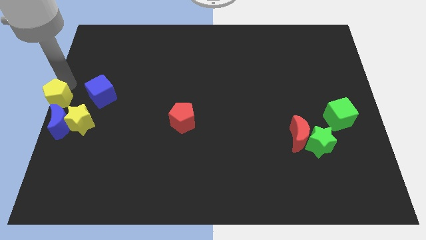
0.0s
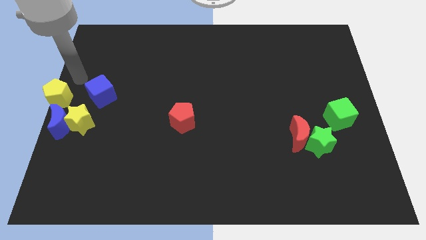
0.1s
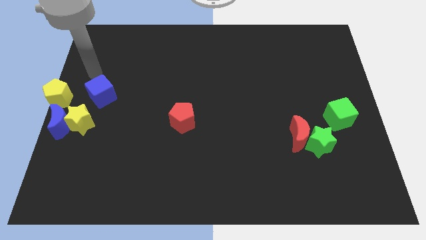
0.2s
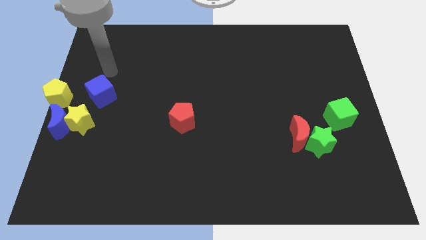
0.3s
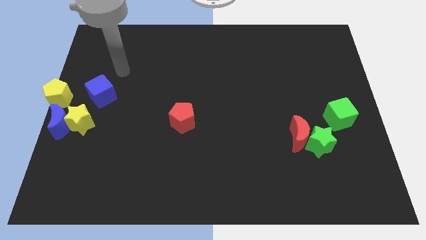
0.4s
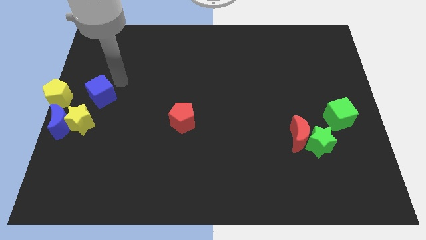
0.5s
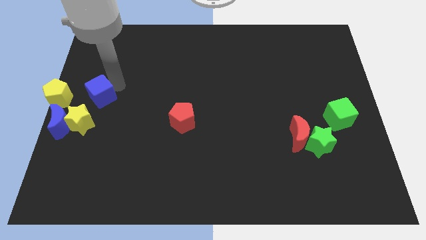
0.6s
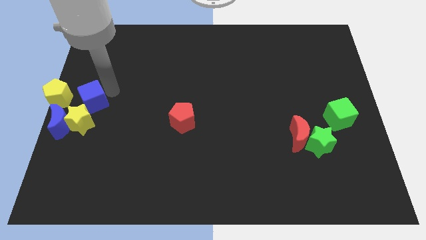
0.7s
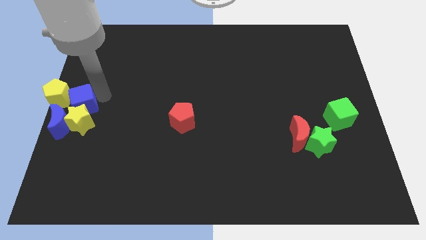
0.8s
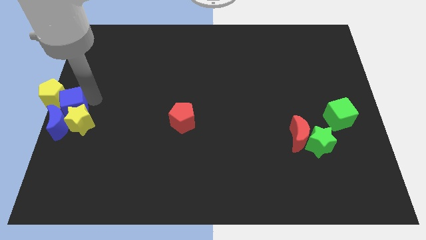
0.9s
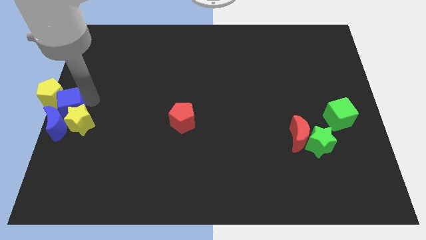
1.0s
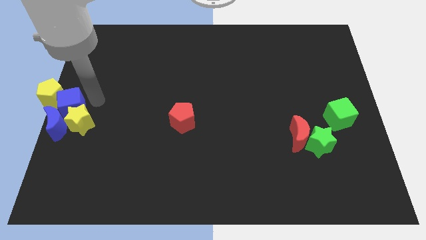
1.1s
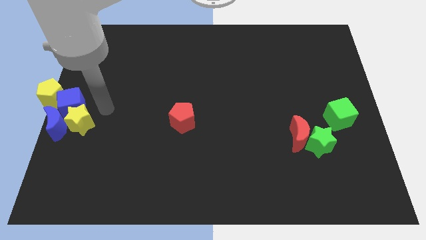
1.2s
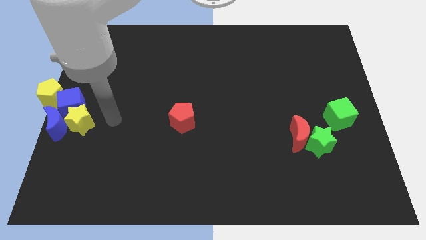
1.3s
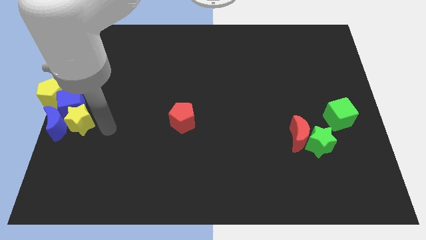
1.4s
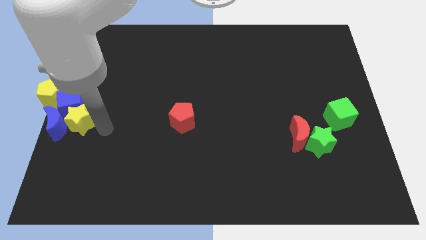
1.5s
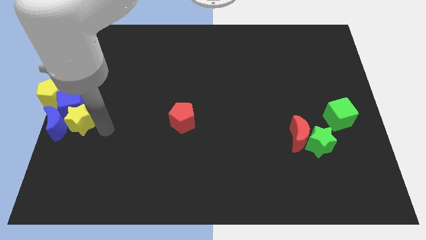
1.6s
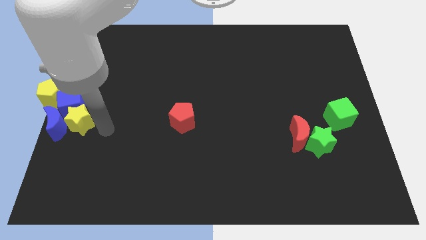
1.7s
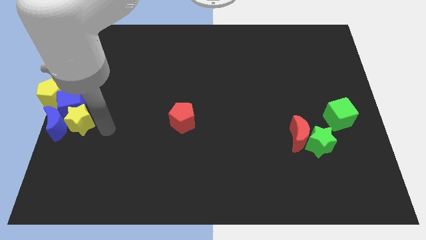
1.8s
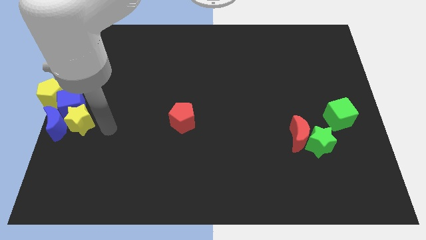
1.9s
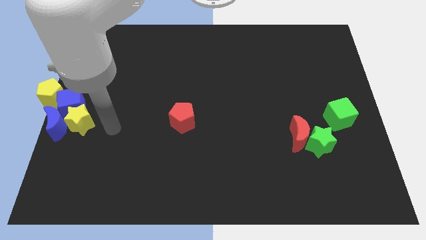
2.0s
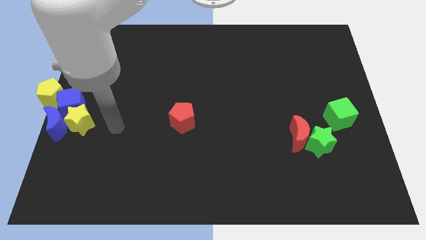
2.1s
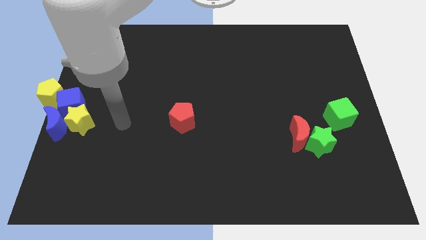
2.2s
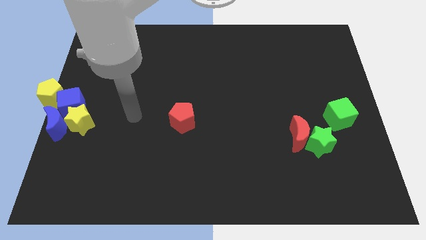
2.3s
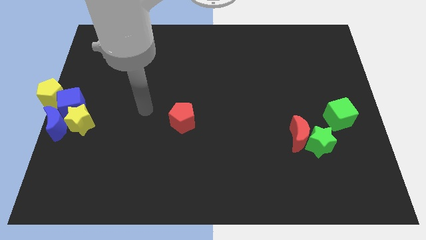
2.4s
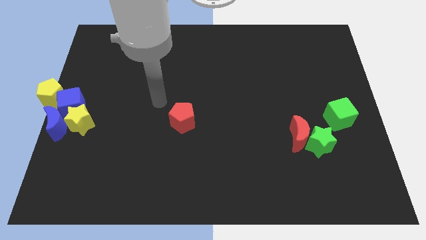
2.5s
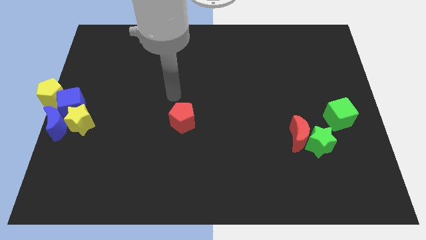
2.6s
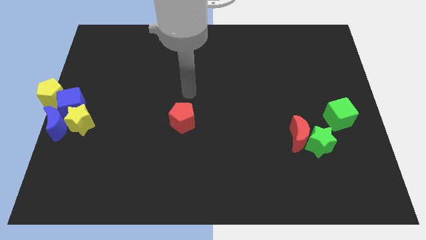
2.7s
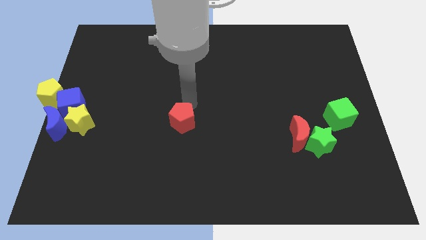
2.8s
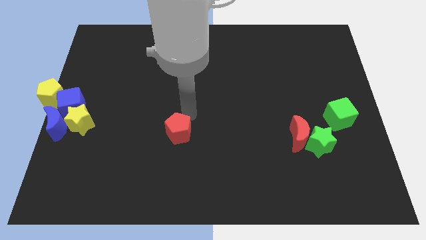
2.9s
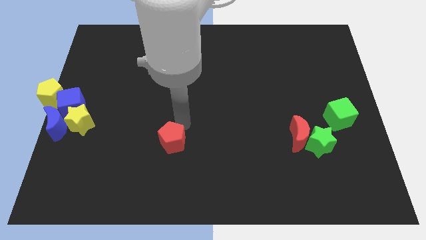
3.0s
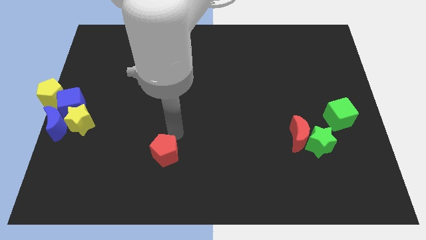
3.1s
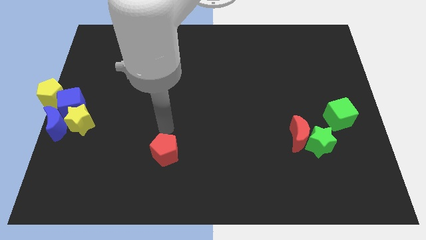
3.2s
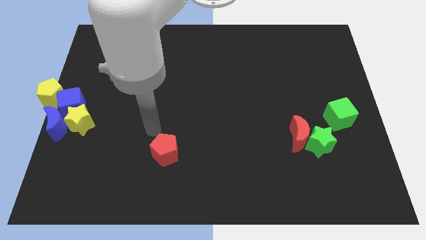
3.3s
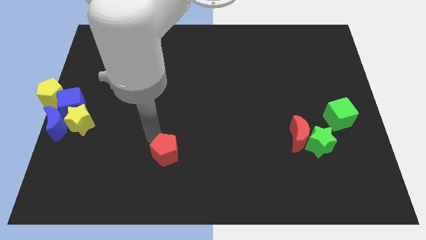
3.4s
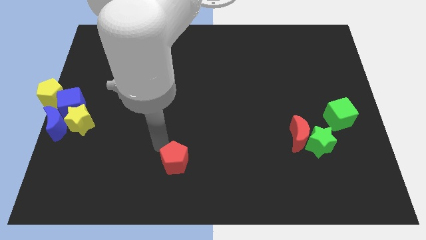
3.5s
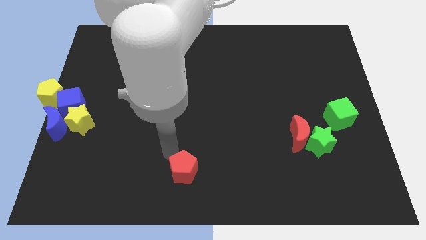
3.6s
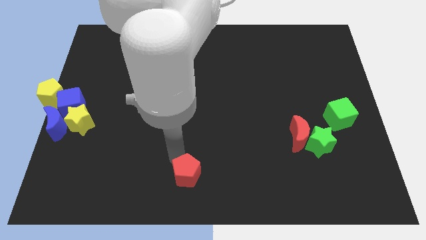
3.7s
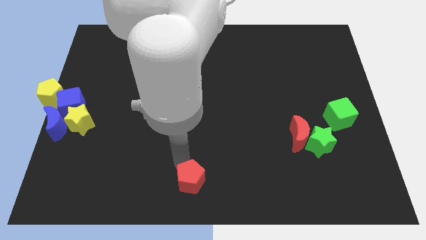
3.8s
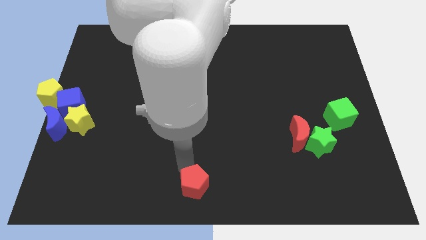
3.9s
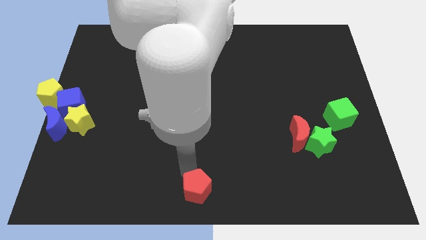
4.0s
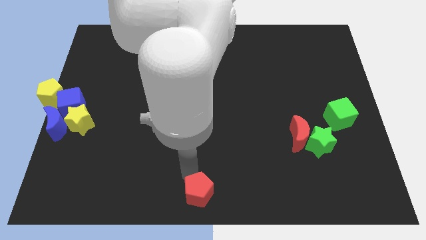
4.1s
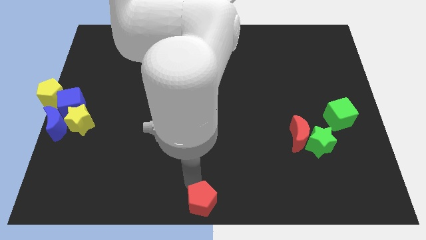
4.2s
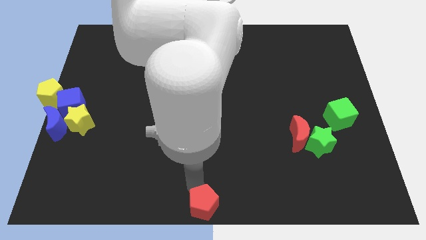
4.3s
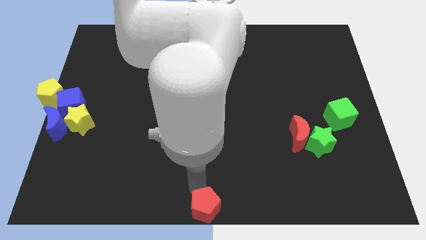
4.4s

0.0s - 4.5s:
drag the red pentagon towards the bottom side of the board

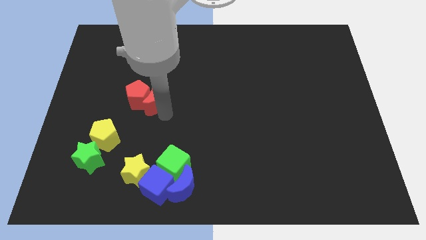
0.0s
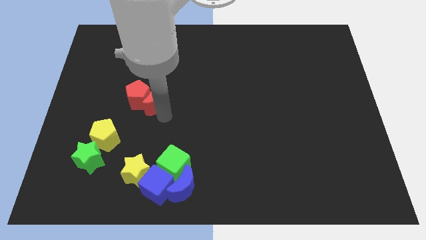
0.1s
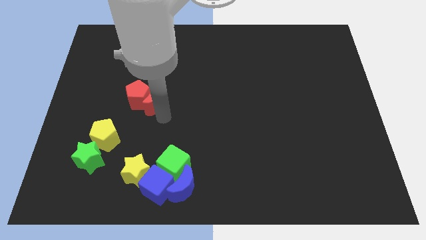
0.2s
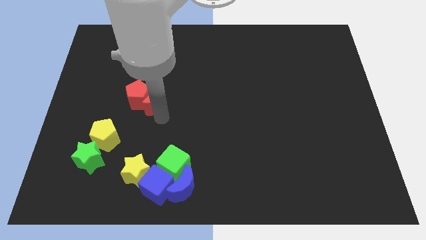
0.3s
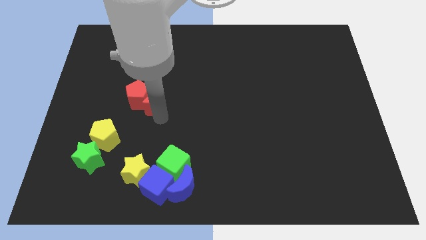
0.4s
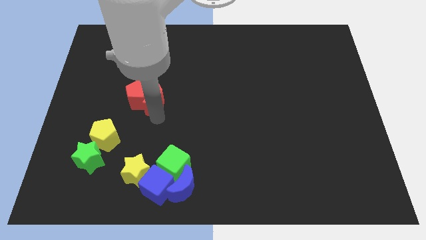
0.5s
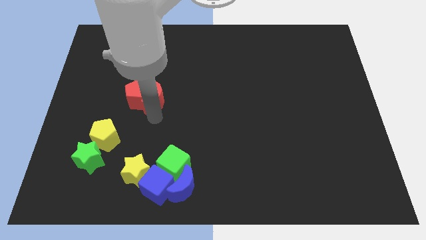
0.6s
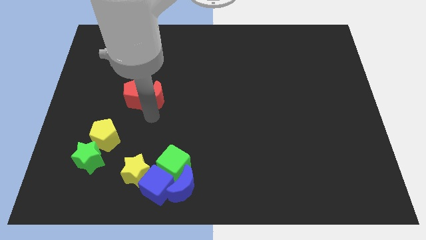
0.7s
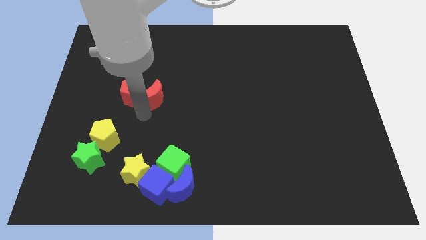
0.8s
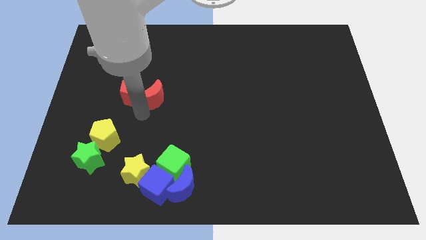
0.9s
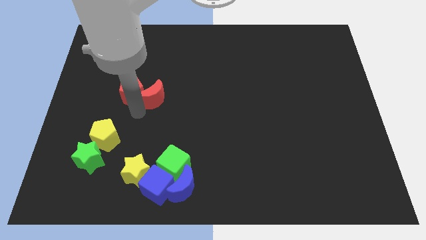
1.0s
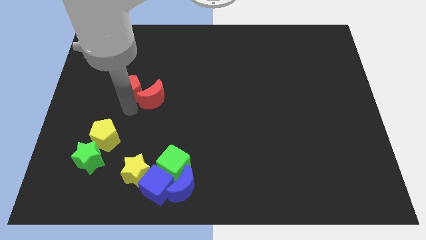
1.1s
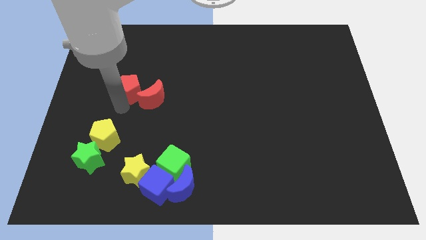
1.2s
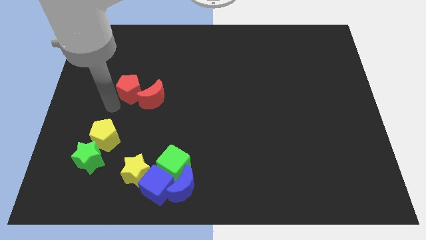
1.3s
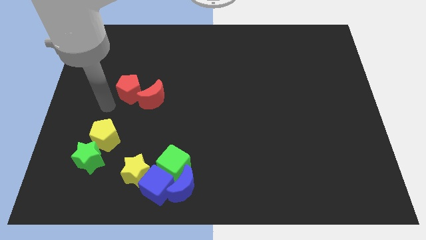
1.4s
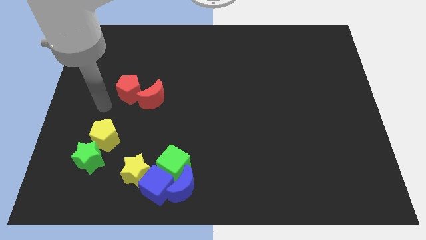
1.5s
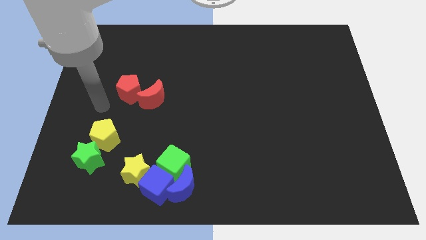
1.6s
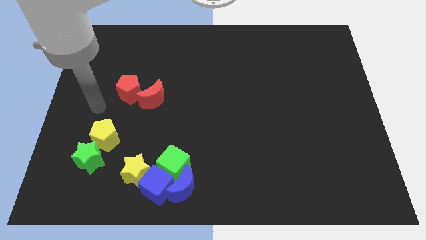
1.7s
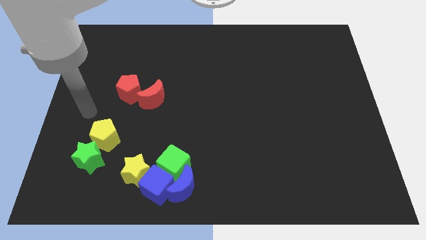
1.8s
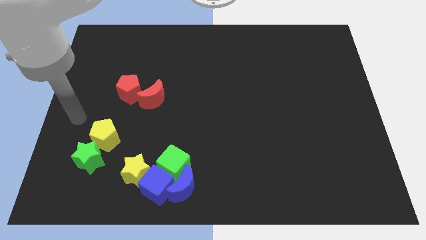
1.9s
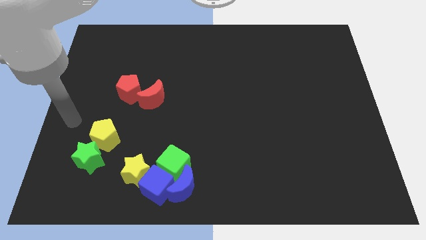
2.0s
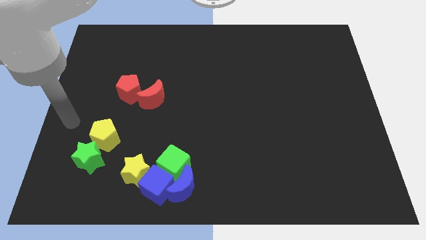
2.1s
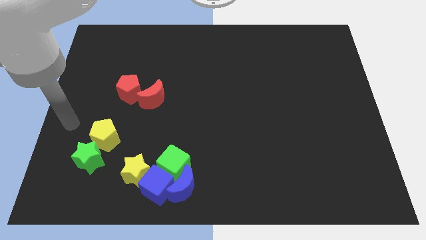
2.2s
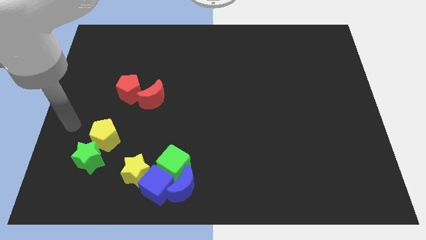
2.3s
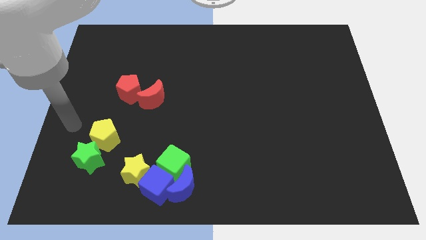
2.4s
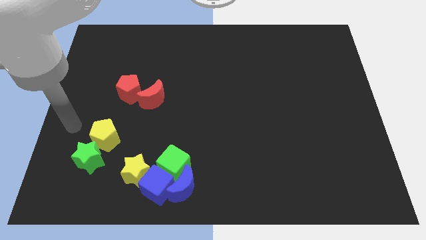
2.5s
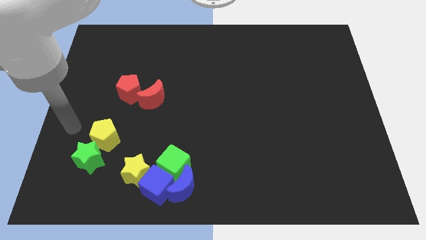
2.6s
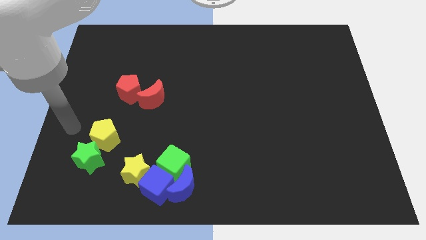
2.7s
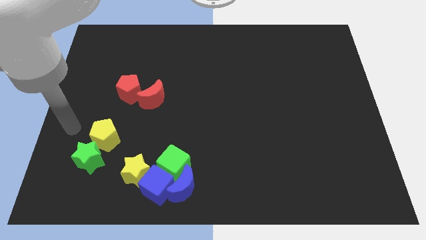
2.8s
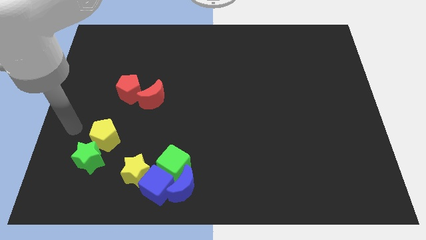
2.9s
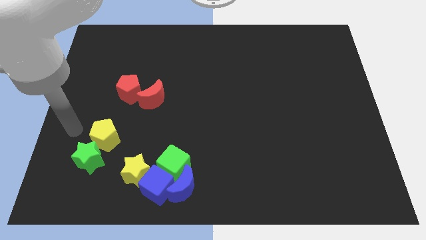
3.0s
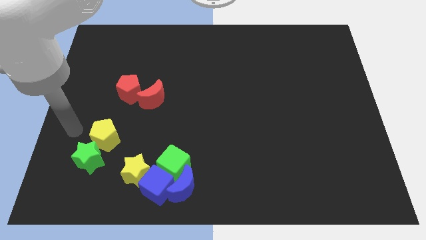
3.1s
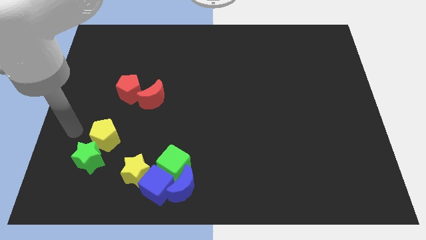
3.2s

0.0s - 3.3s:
move your arm away from the red moon

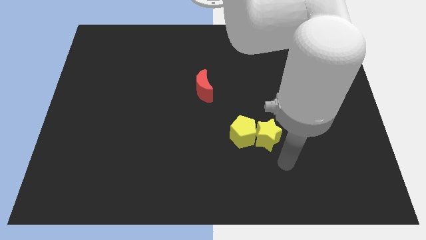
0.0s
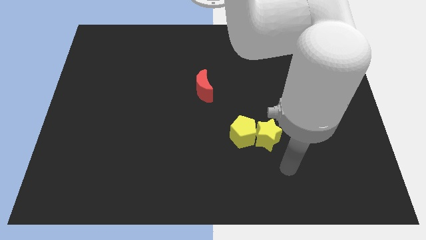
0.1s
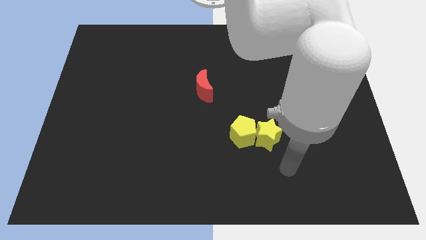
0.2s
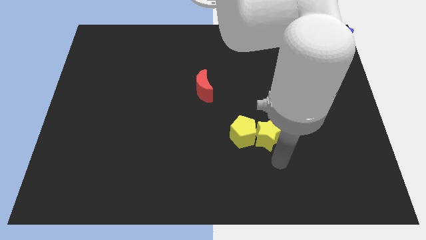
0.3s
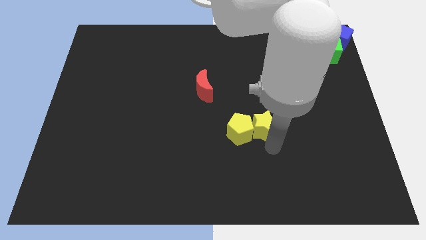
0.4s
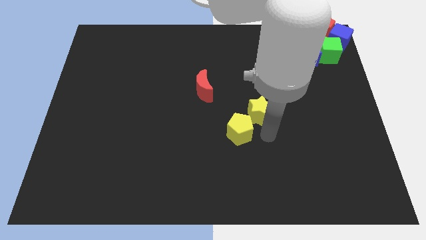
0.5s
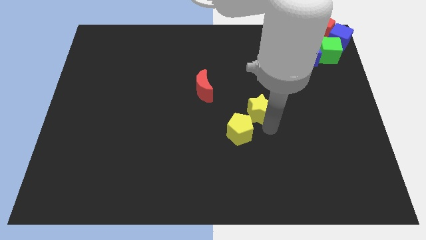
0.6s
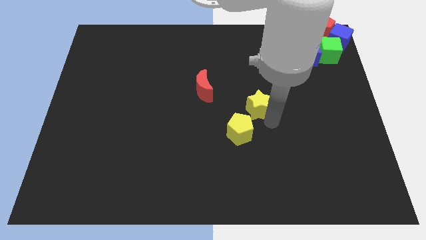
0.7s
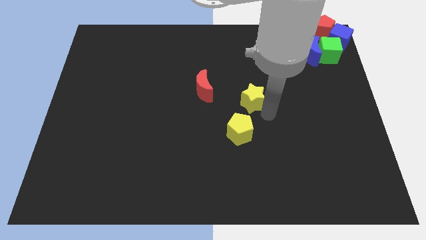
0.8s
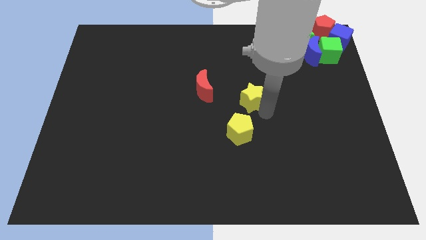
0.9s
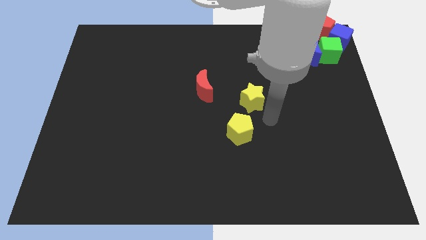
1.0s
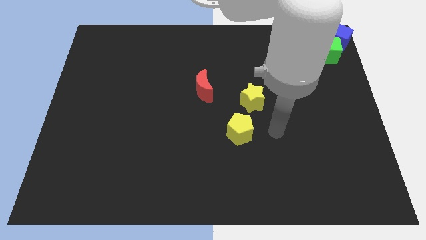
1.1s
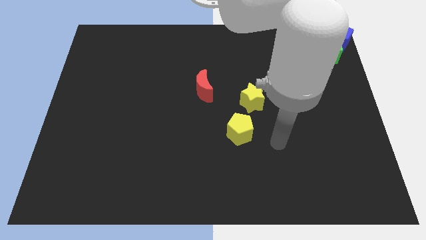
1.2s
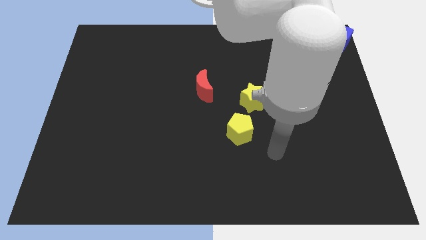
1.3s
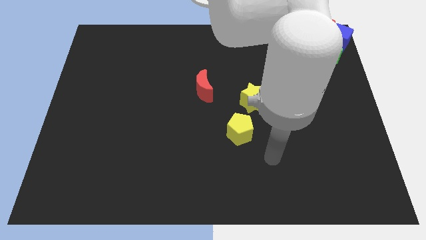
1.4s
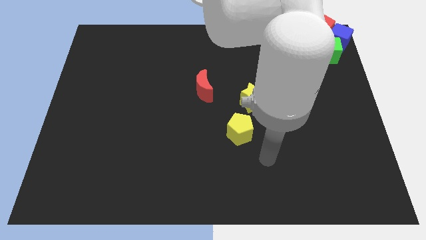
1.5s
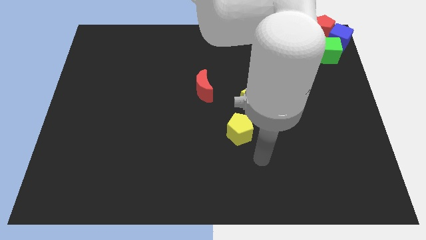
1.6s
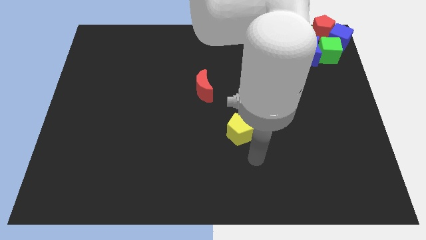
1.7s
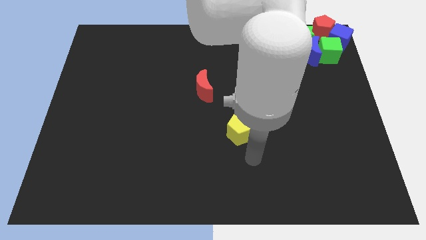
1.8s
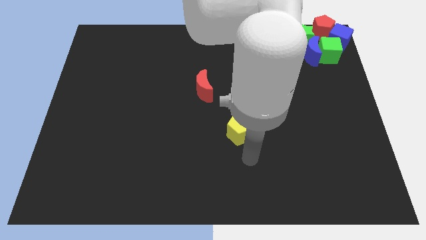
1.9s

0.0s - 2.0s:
move your arm away from the yellow star
